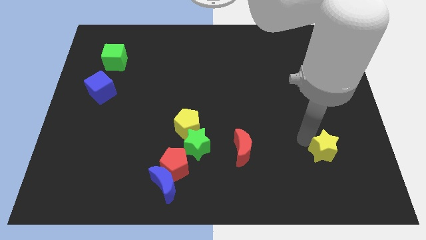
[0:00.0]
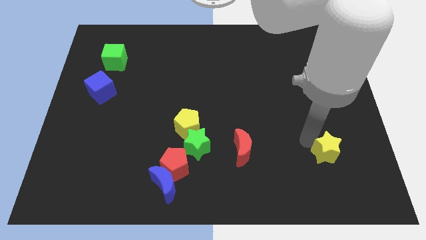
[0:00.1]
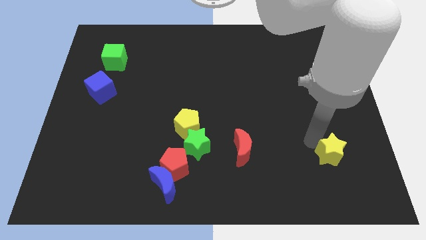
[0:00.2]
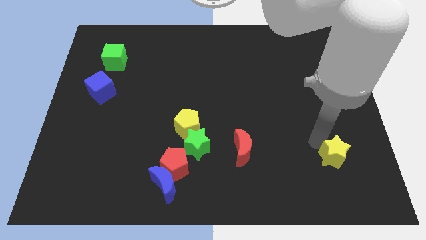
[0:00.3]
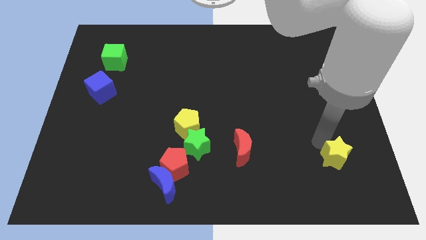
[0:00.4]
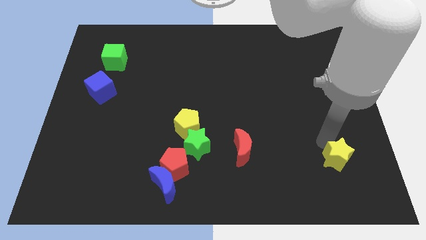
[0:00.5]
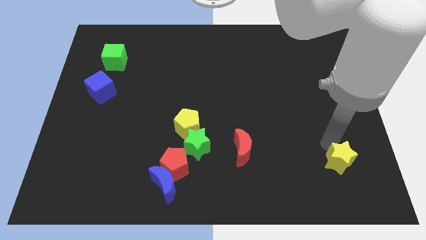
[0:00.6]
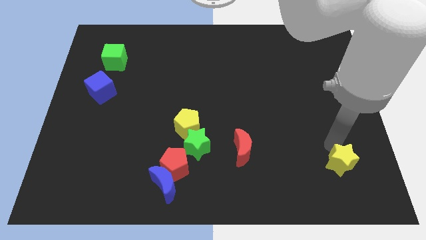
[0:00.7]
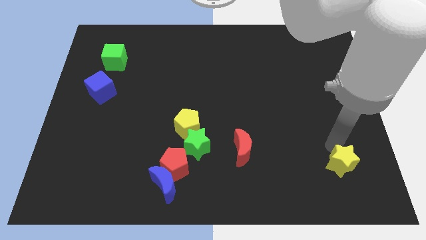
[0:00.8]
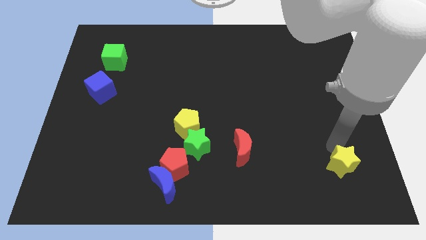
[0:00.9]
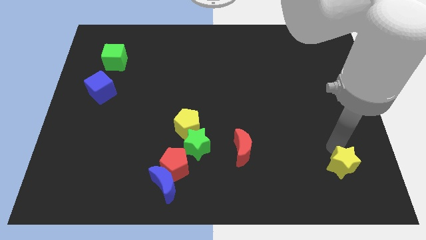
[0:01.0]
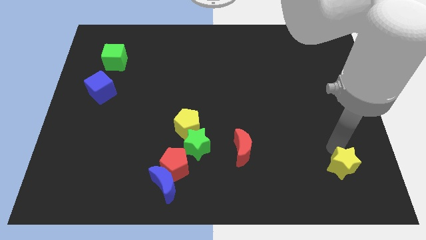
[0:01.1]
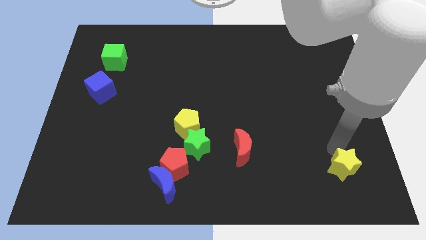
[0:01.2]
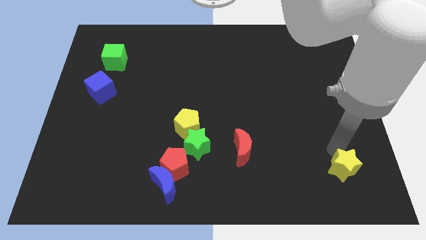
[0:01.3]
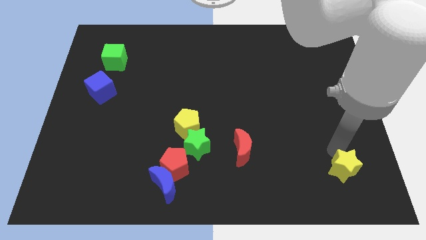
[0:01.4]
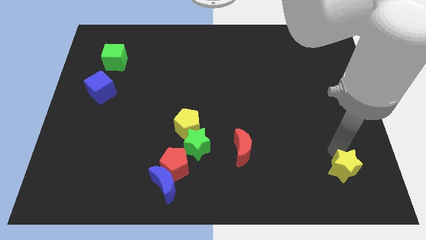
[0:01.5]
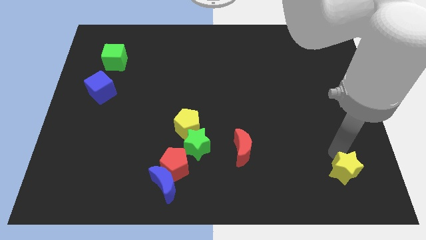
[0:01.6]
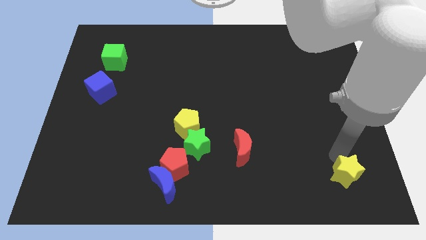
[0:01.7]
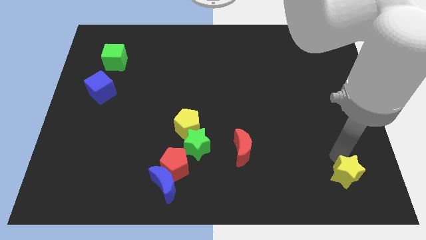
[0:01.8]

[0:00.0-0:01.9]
place the yellow star towards the bottom right of the board

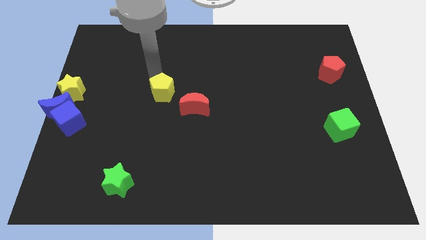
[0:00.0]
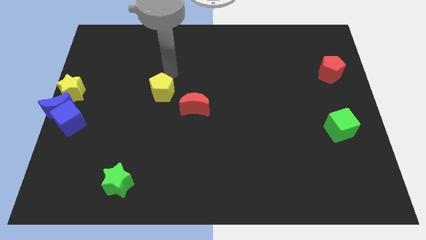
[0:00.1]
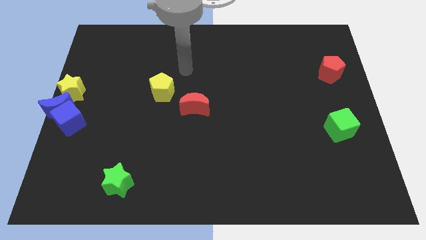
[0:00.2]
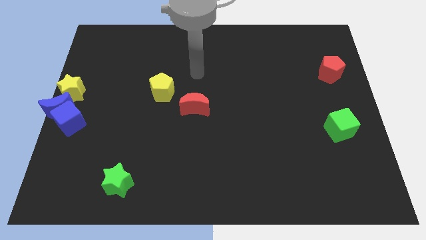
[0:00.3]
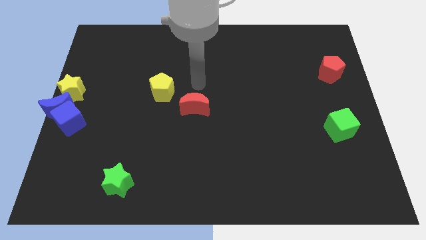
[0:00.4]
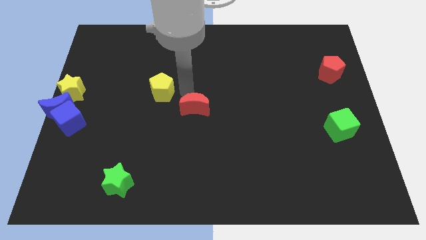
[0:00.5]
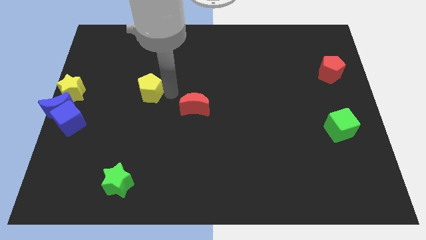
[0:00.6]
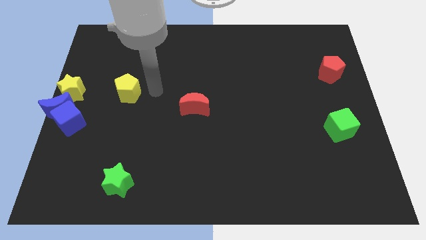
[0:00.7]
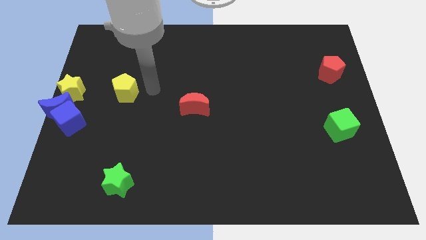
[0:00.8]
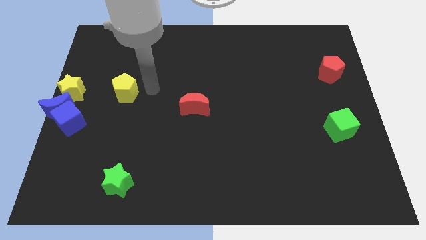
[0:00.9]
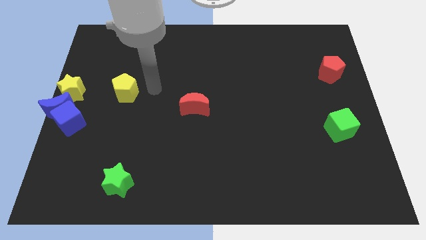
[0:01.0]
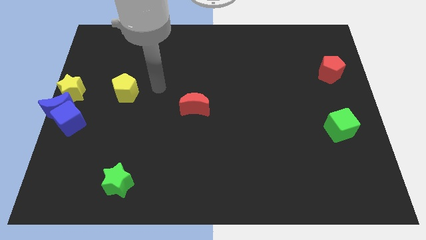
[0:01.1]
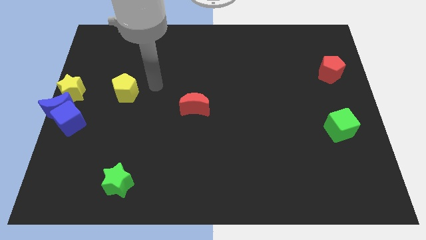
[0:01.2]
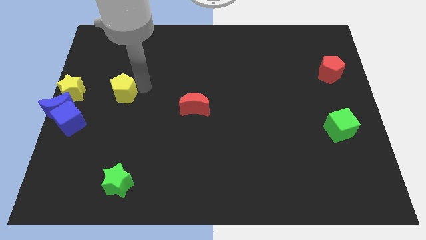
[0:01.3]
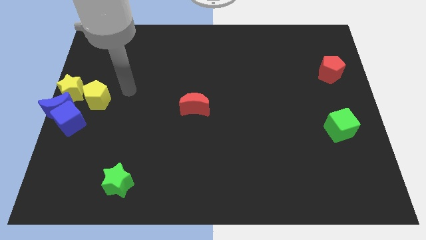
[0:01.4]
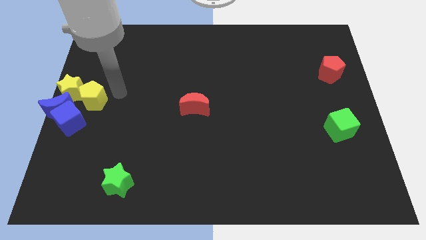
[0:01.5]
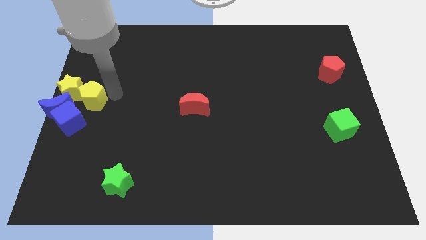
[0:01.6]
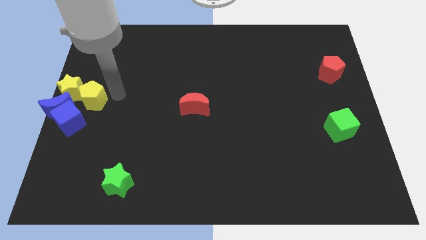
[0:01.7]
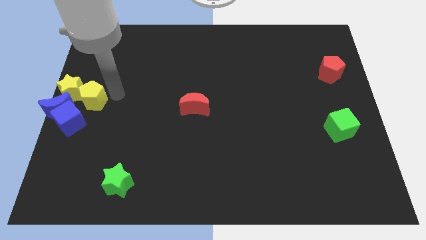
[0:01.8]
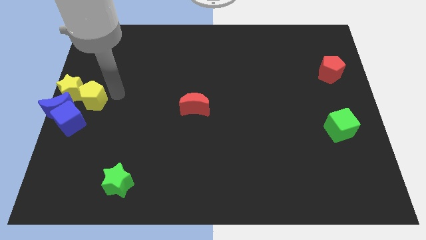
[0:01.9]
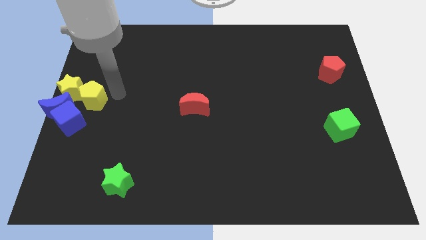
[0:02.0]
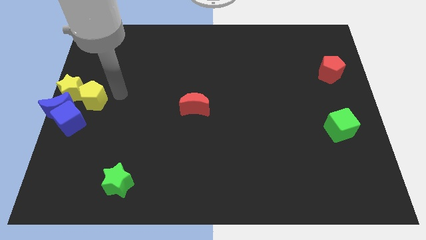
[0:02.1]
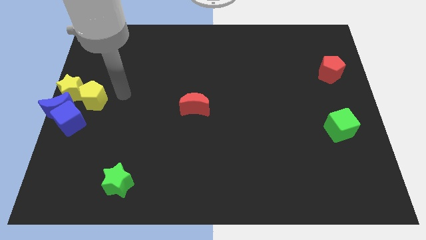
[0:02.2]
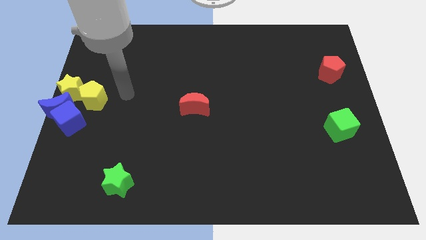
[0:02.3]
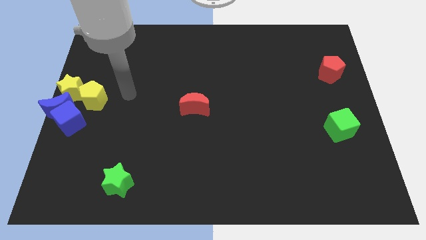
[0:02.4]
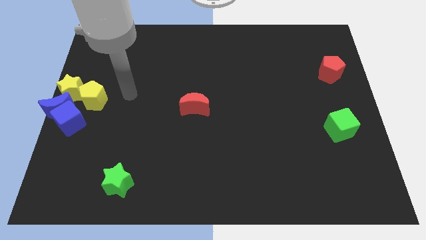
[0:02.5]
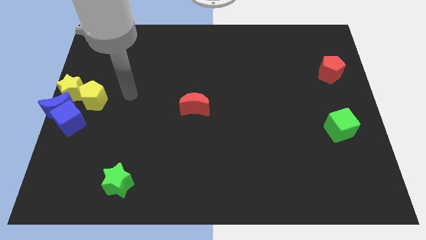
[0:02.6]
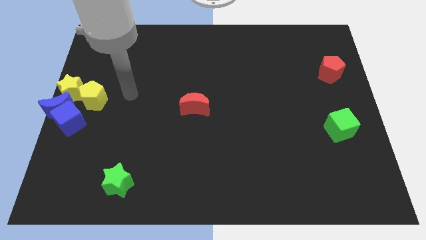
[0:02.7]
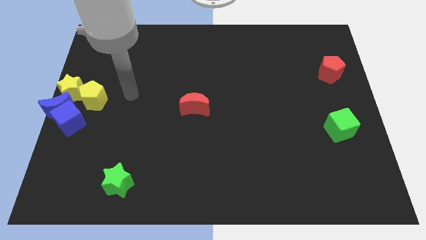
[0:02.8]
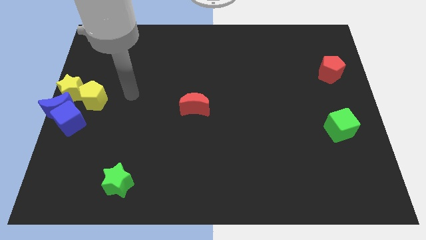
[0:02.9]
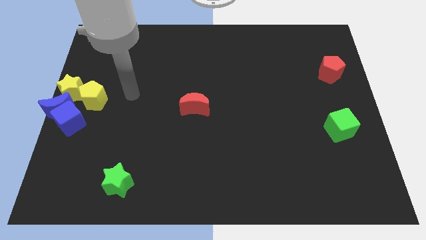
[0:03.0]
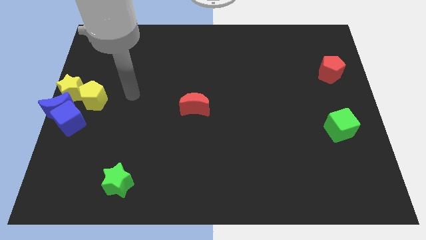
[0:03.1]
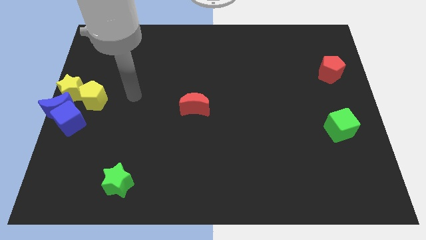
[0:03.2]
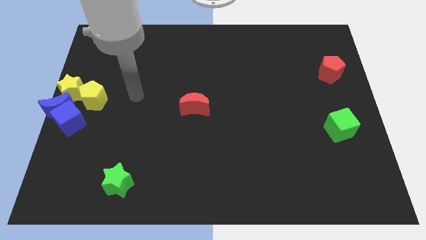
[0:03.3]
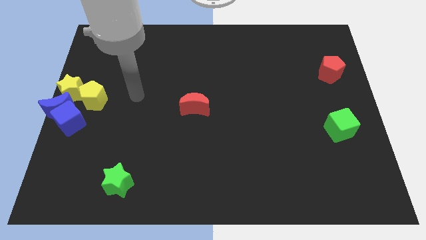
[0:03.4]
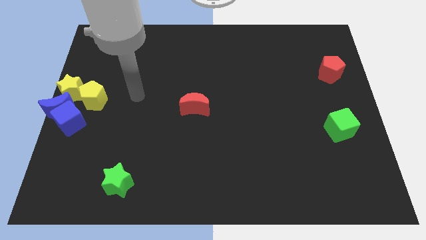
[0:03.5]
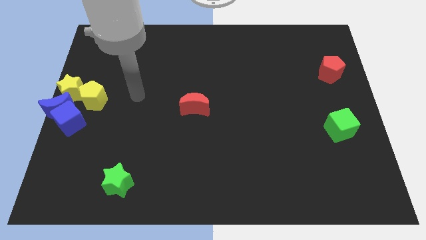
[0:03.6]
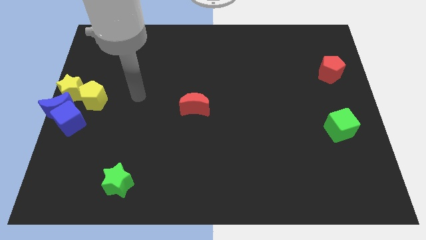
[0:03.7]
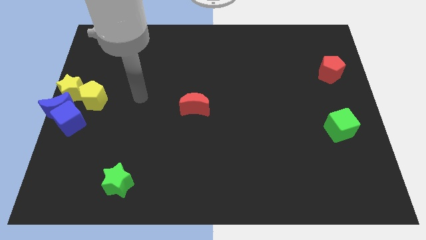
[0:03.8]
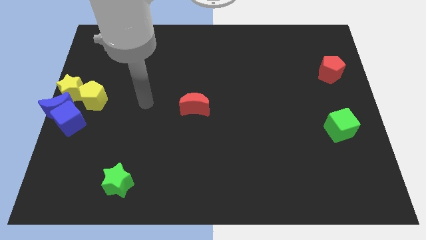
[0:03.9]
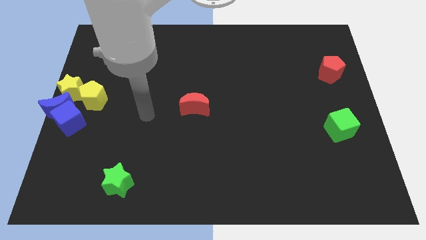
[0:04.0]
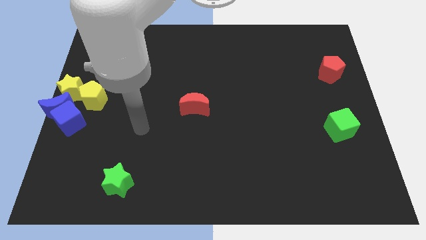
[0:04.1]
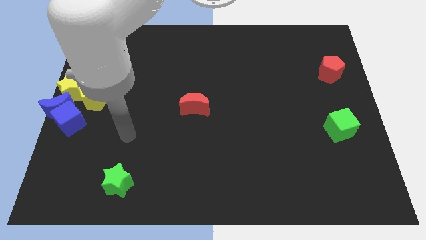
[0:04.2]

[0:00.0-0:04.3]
move yellow pentagon right beside the yellow star

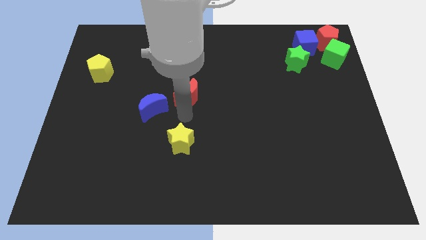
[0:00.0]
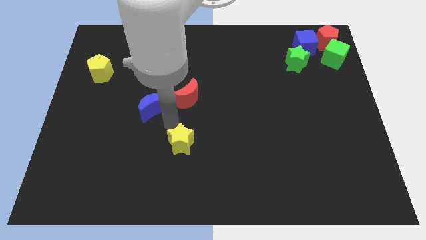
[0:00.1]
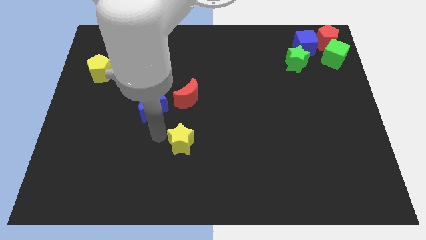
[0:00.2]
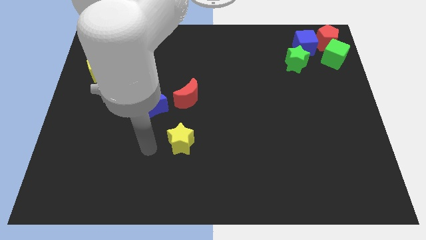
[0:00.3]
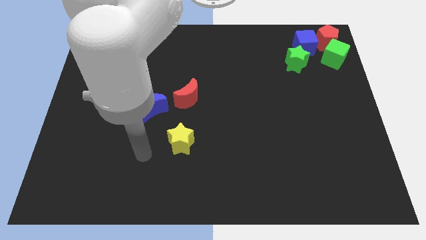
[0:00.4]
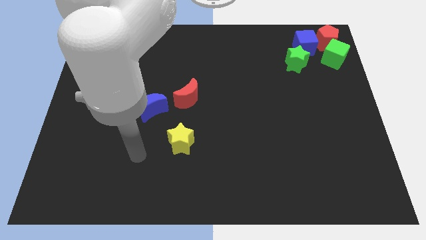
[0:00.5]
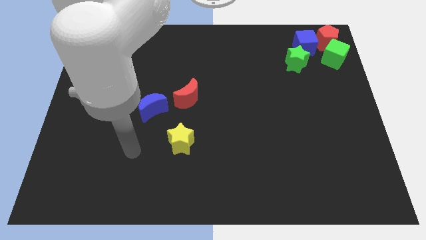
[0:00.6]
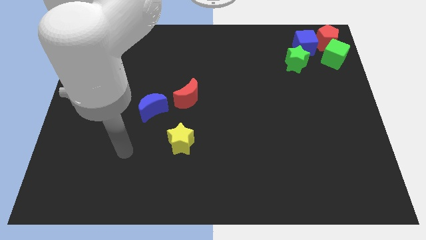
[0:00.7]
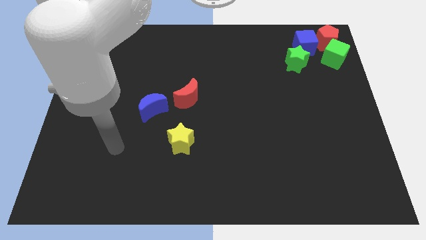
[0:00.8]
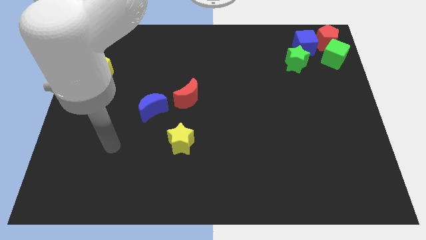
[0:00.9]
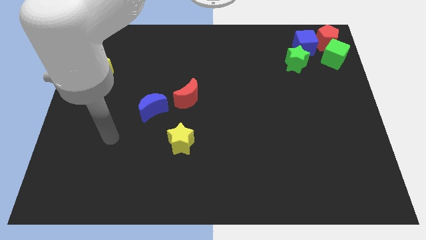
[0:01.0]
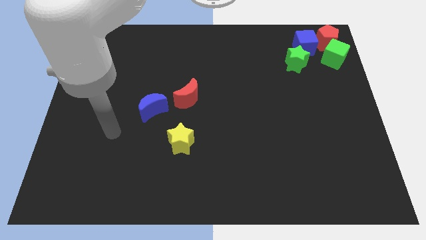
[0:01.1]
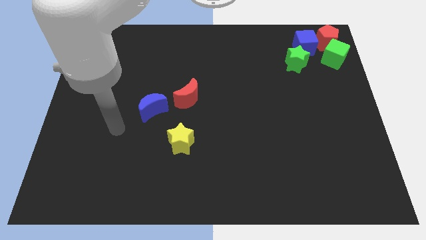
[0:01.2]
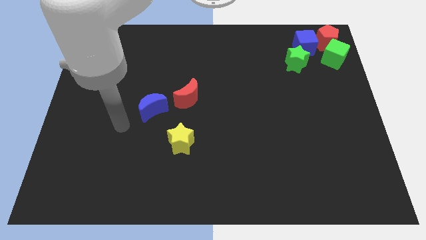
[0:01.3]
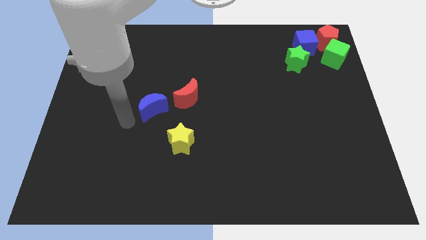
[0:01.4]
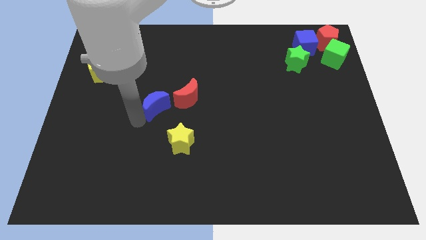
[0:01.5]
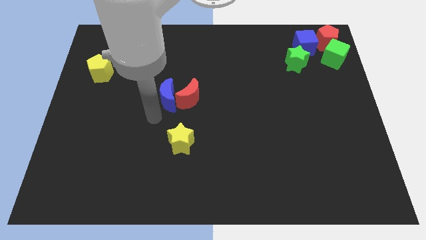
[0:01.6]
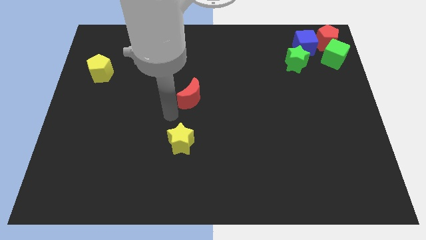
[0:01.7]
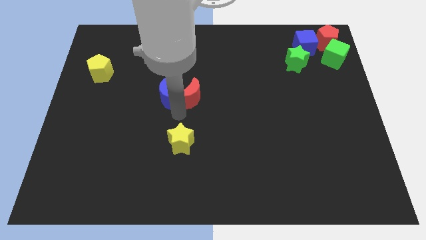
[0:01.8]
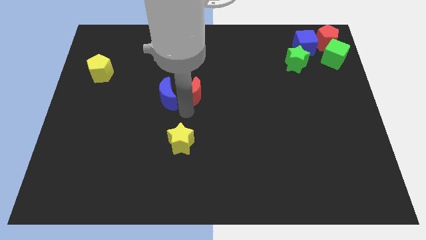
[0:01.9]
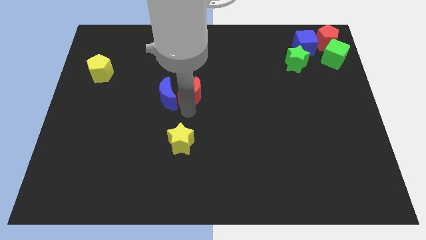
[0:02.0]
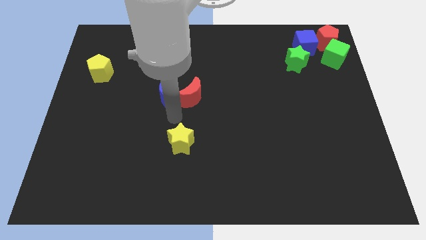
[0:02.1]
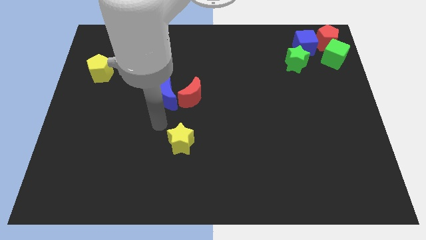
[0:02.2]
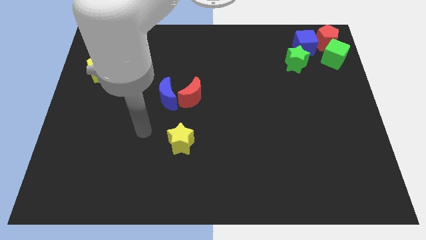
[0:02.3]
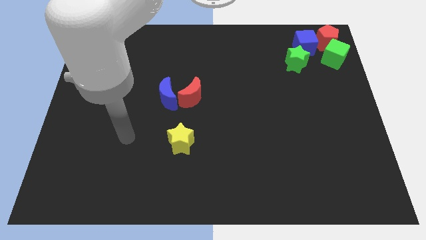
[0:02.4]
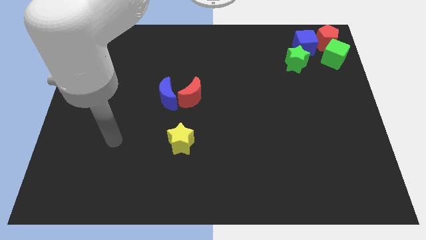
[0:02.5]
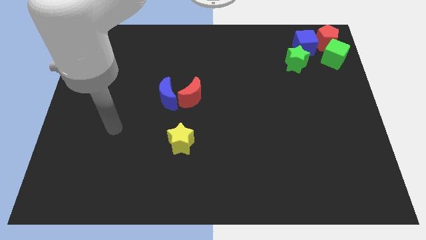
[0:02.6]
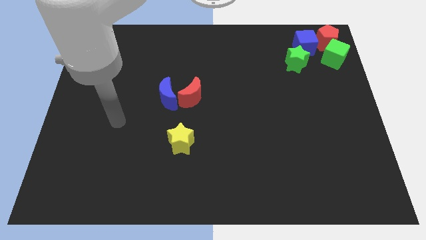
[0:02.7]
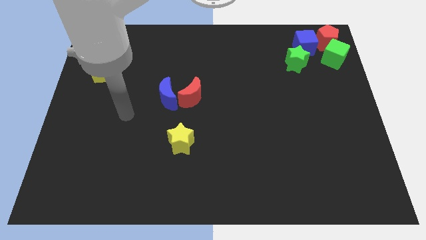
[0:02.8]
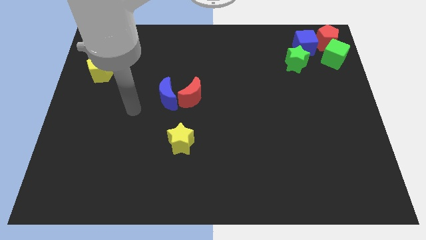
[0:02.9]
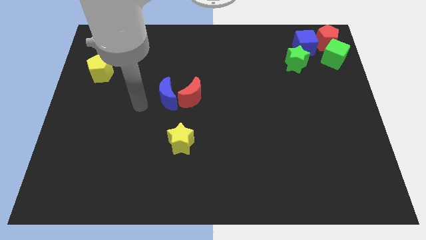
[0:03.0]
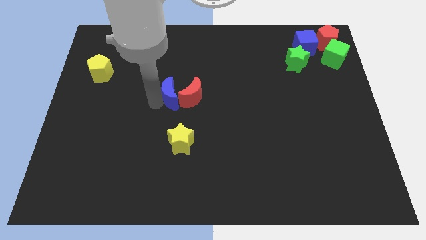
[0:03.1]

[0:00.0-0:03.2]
slightly move the blue crescent close to the red crescent
